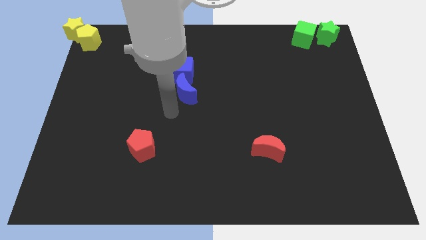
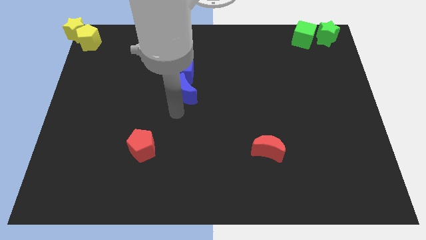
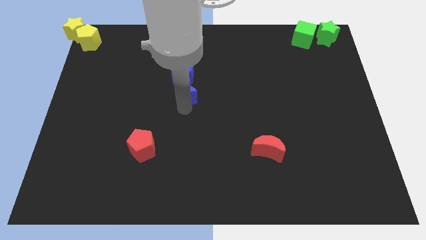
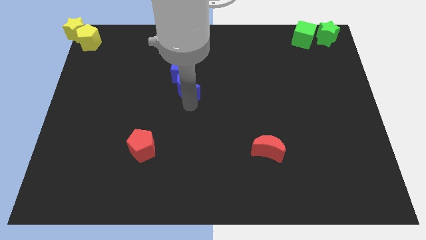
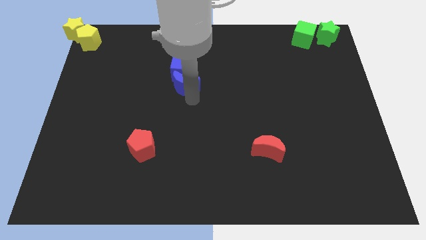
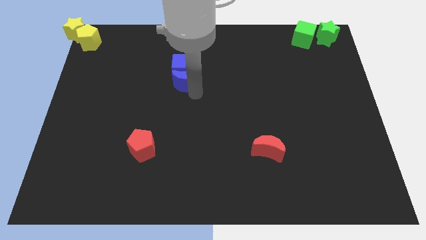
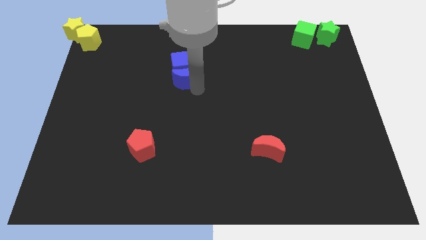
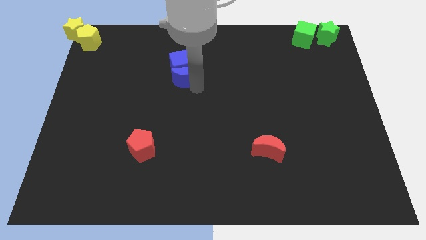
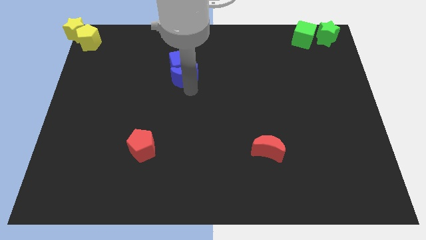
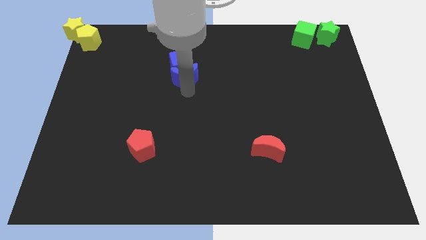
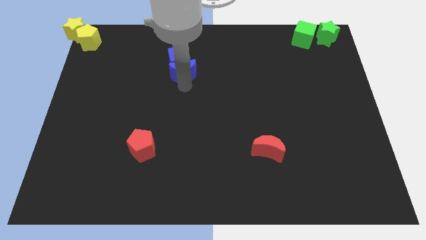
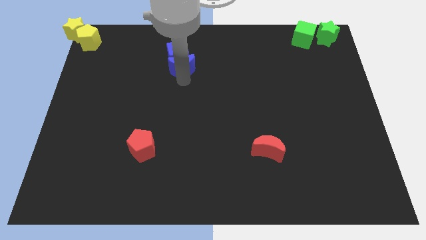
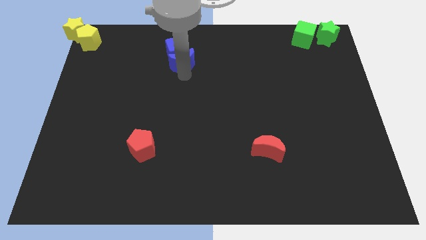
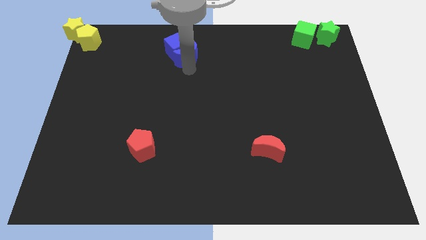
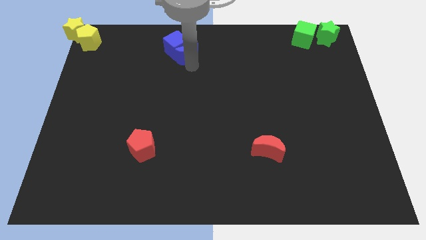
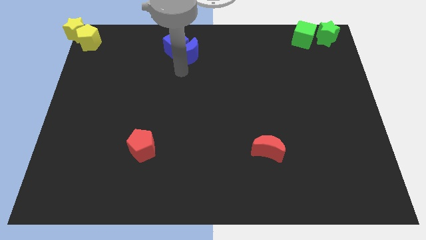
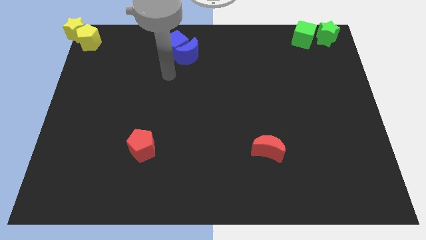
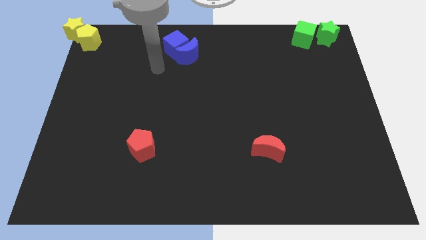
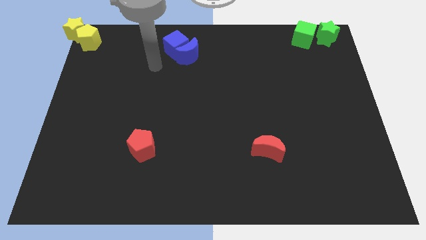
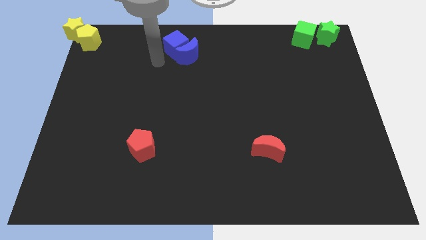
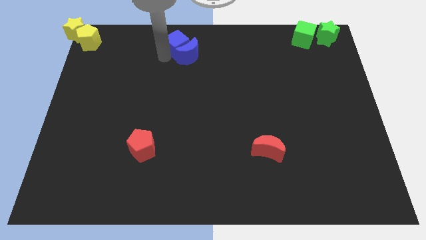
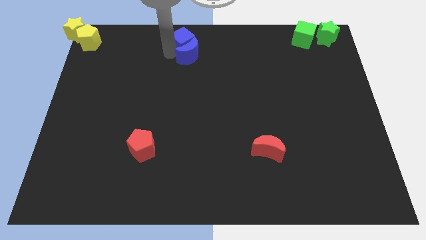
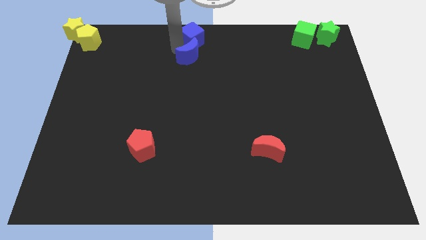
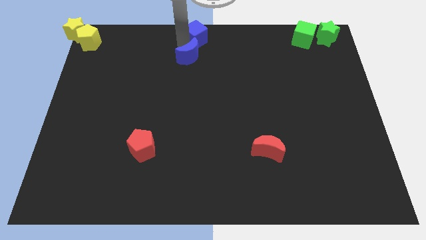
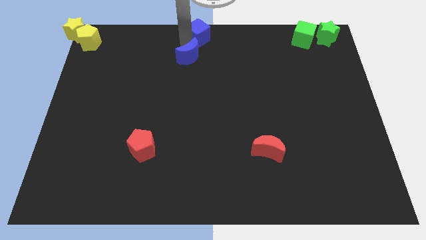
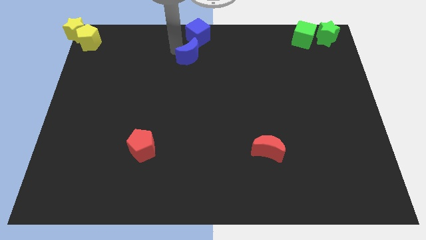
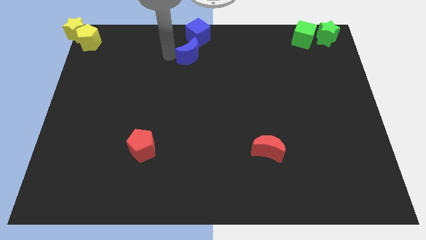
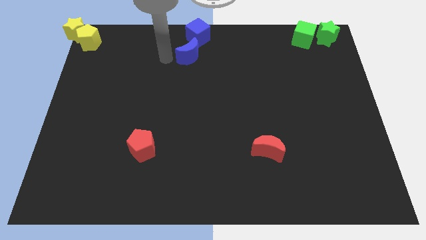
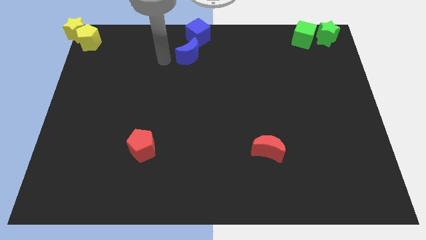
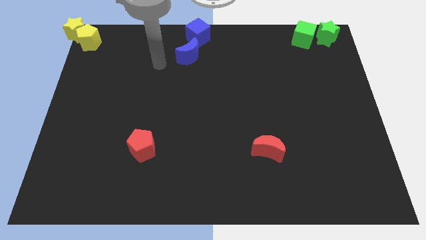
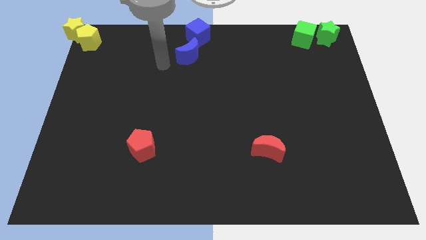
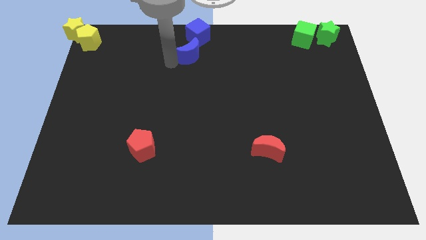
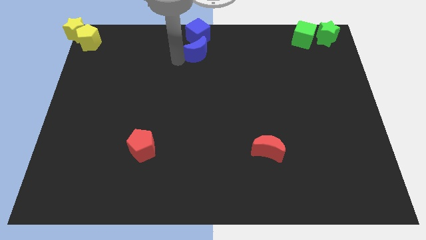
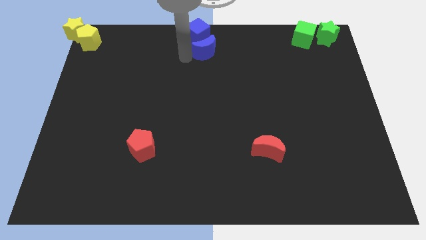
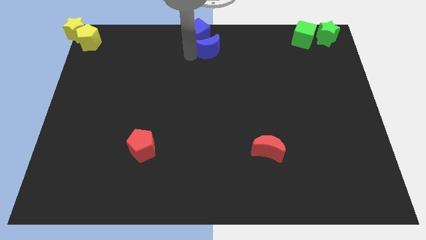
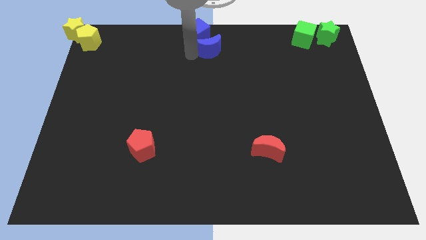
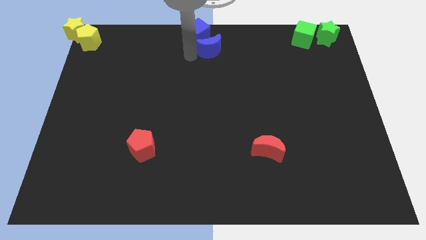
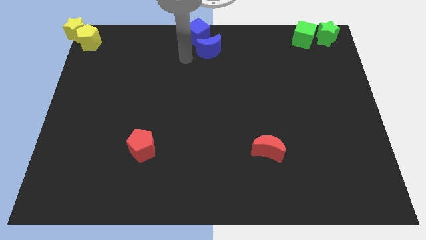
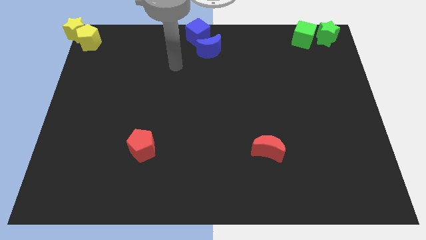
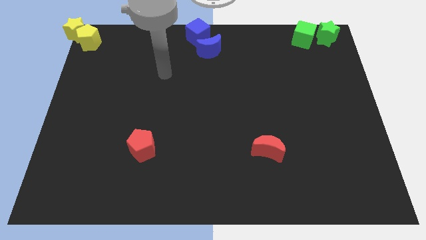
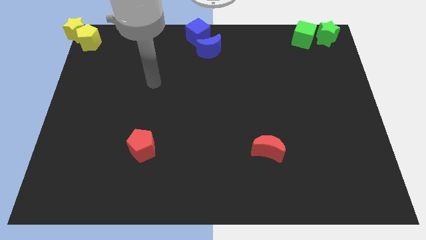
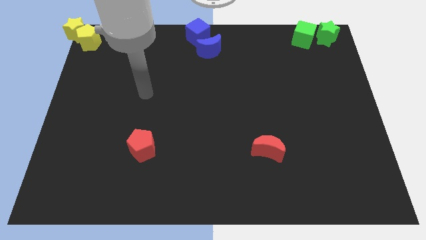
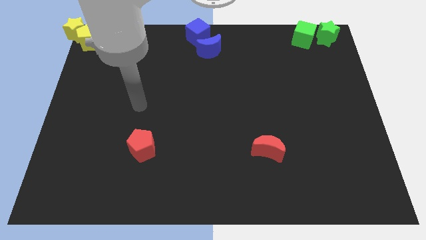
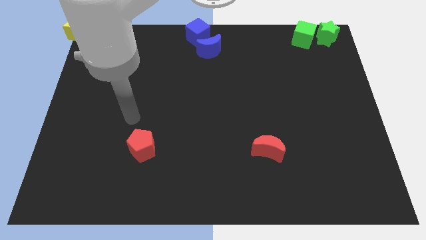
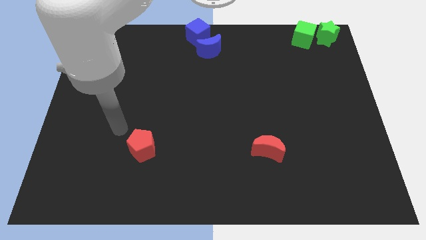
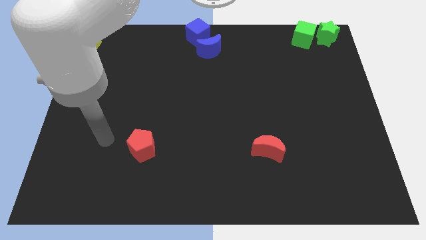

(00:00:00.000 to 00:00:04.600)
place blue cube and blue moon to the top center of the board

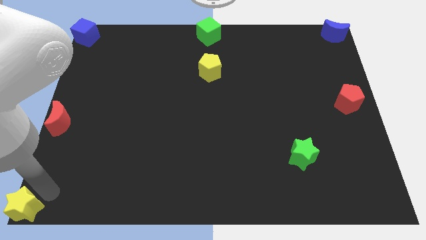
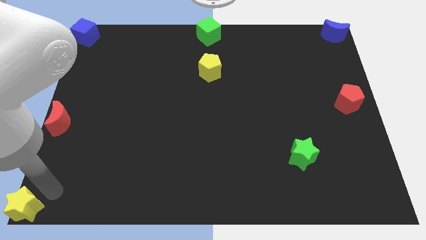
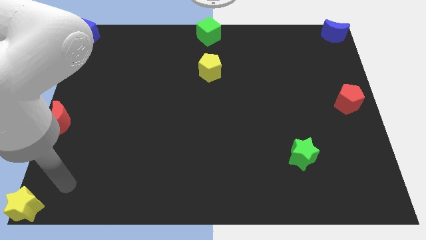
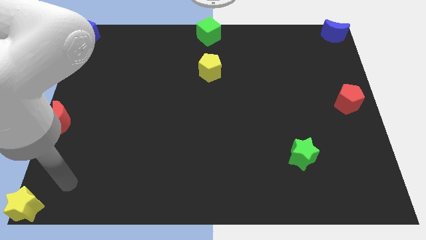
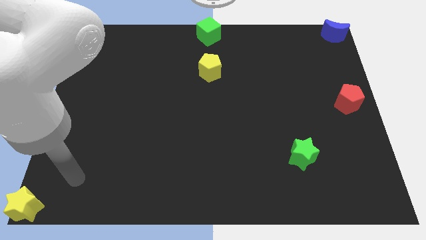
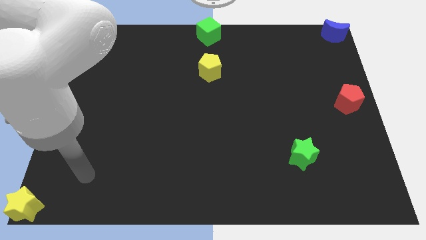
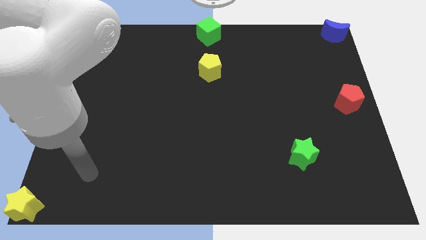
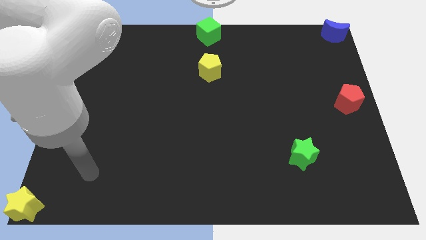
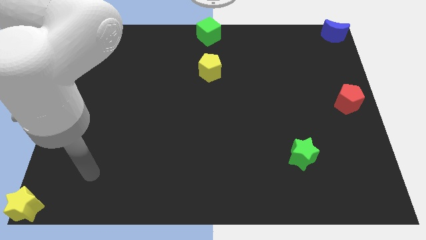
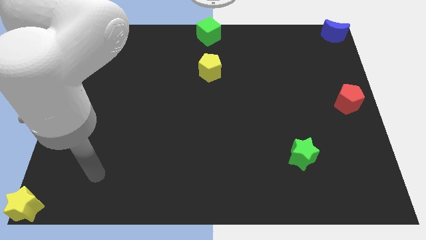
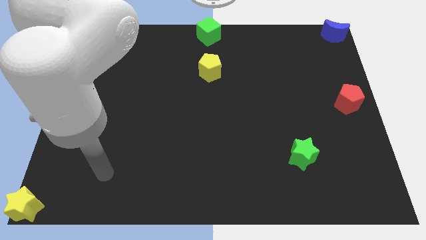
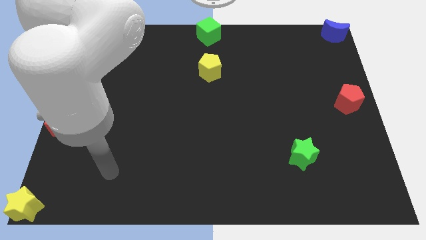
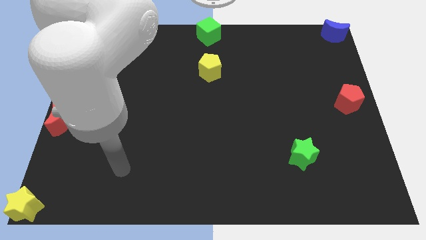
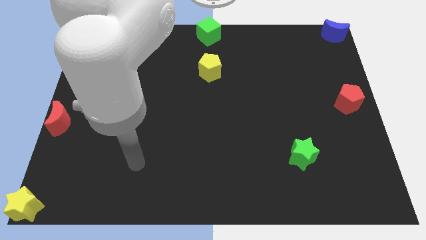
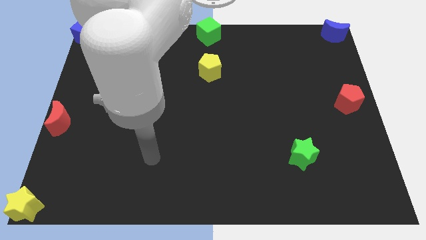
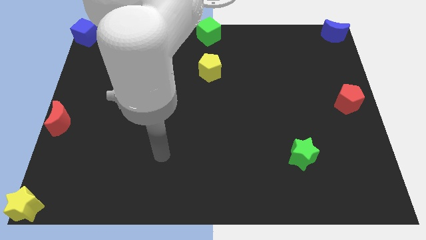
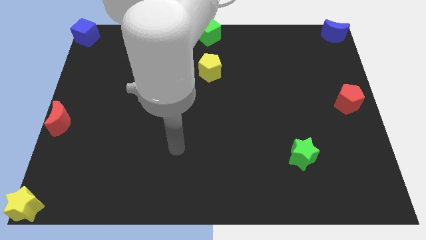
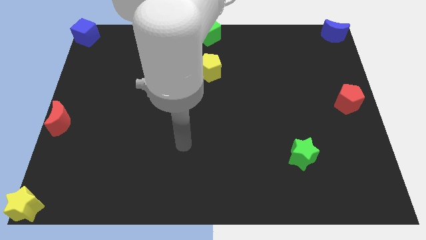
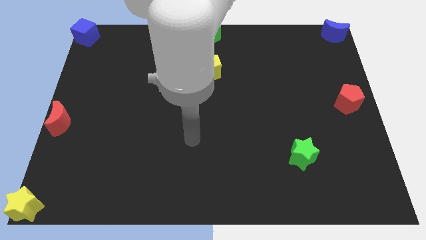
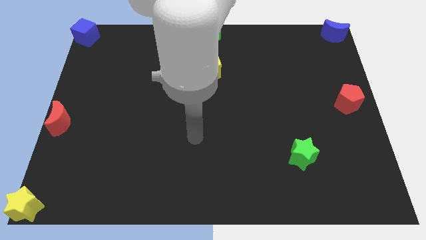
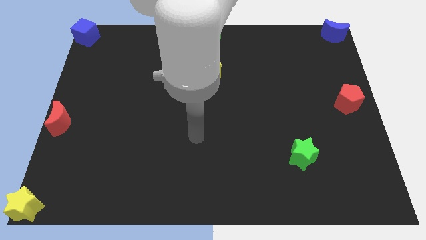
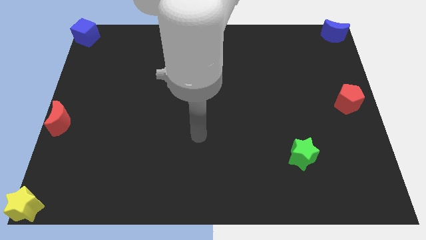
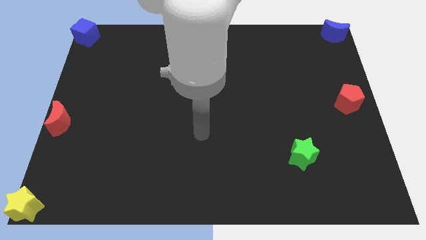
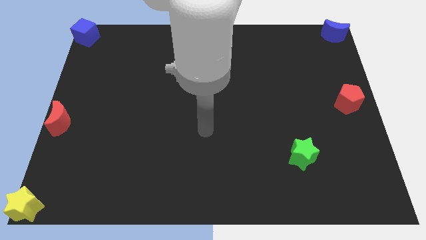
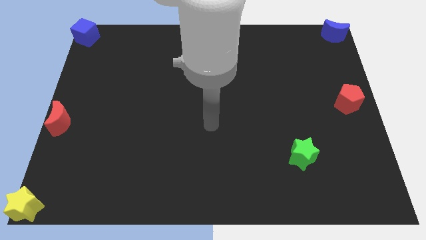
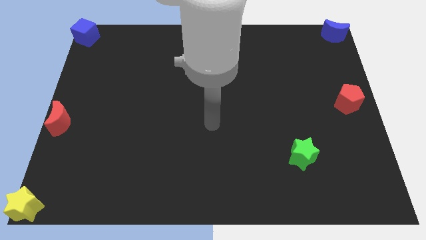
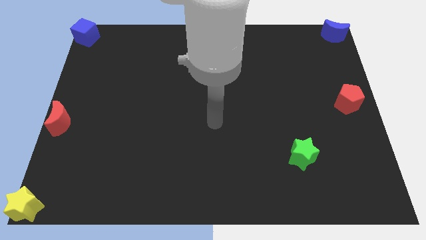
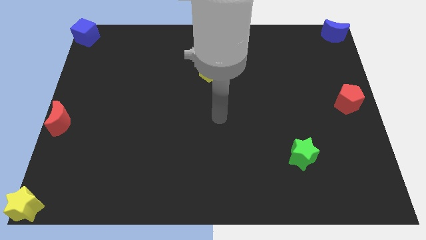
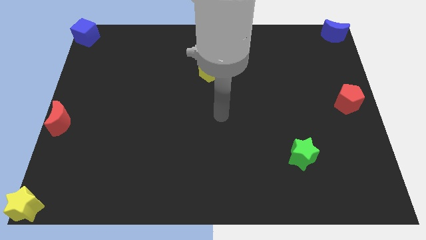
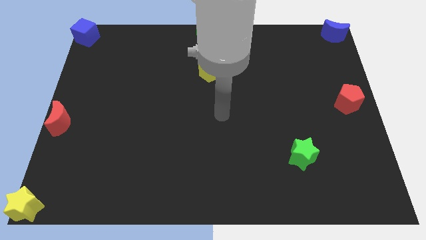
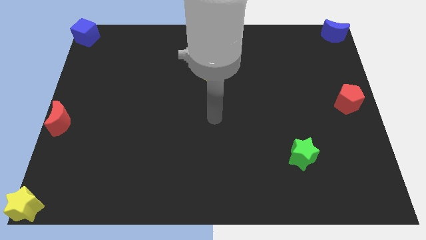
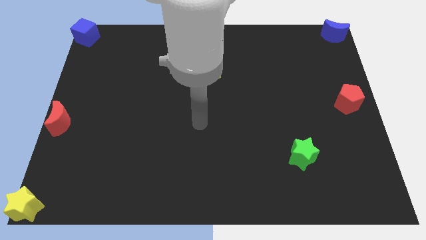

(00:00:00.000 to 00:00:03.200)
move your arm to the center of the board

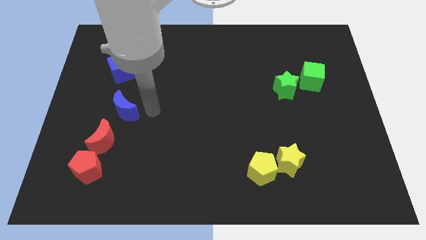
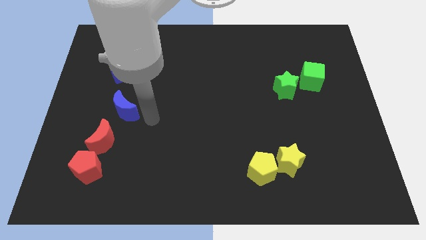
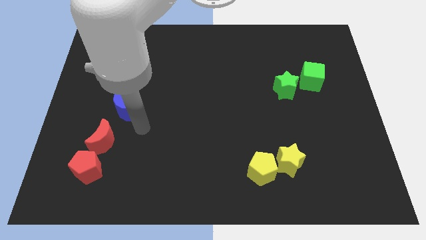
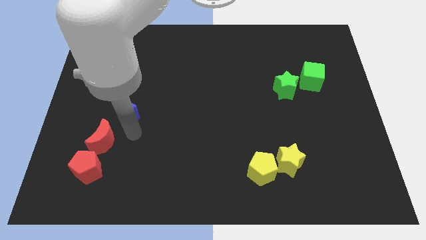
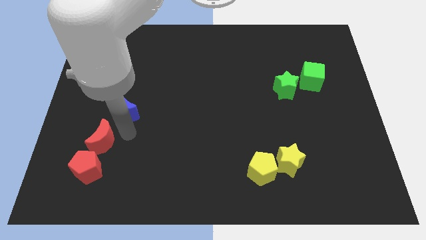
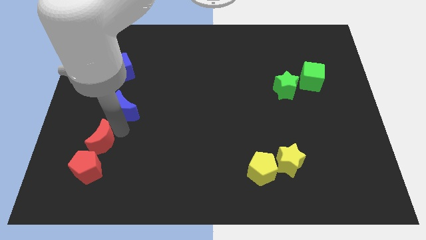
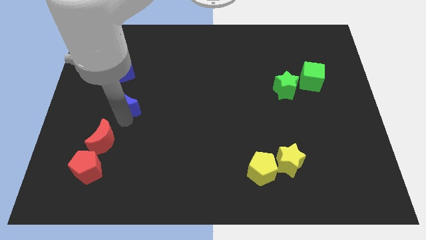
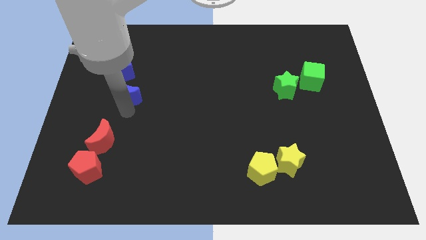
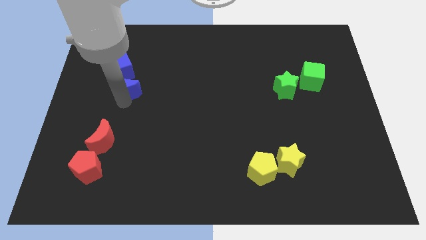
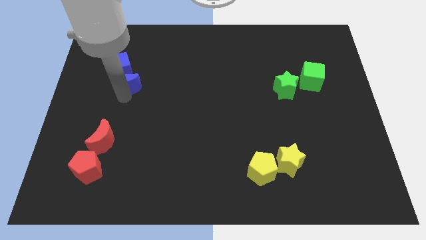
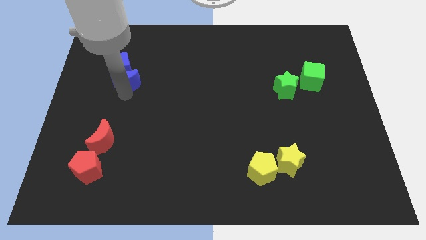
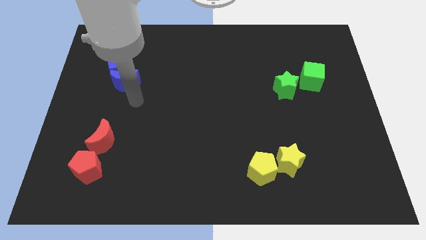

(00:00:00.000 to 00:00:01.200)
place the blue moon under the blue cube
